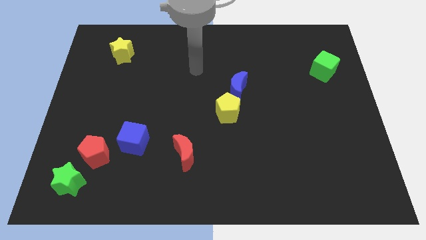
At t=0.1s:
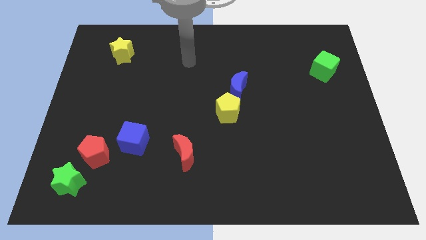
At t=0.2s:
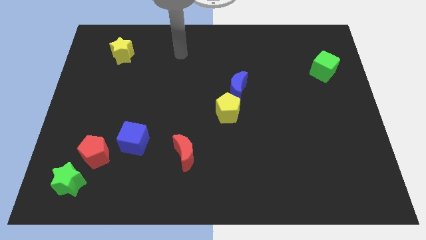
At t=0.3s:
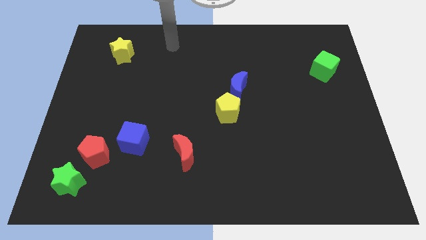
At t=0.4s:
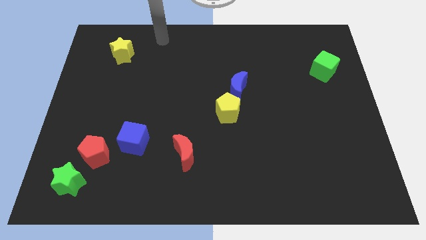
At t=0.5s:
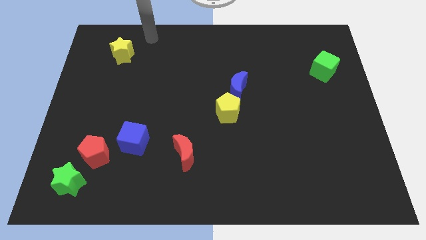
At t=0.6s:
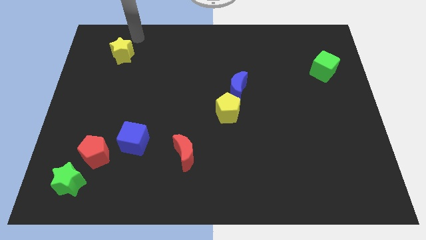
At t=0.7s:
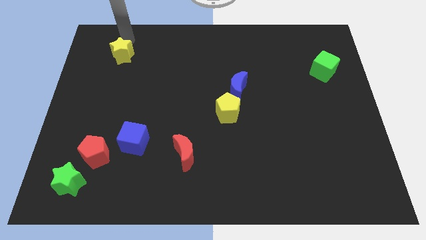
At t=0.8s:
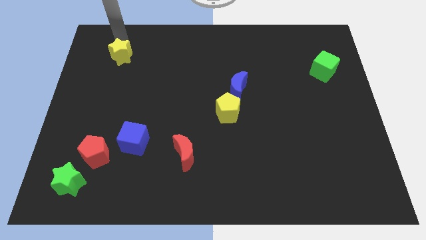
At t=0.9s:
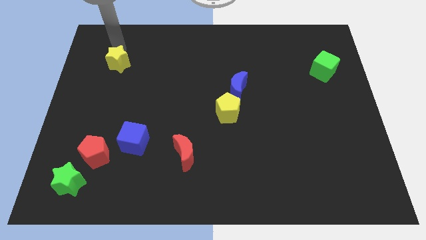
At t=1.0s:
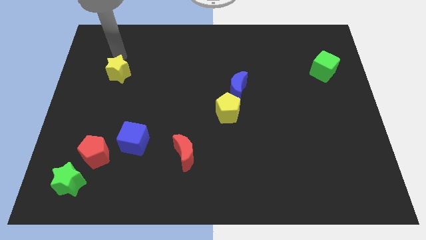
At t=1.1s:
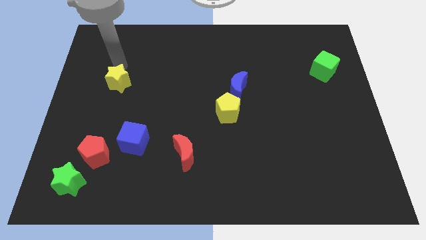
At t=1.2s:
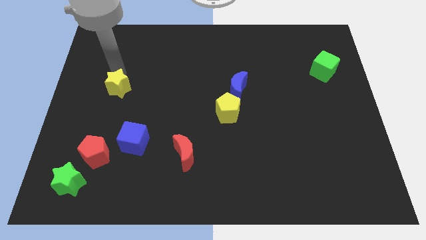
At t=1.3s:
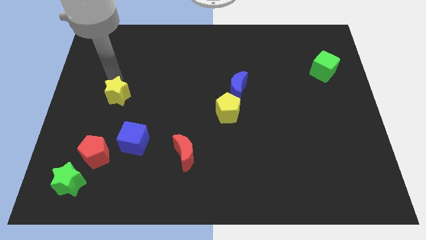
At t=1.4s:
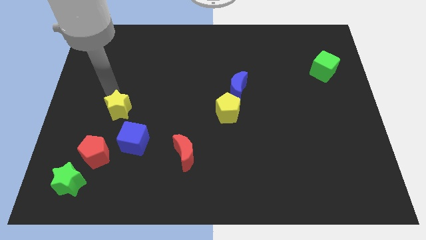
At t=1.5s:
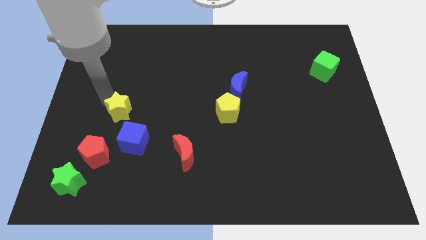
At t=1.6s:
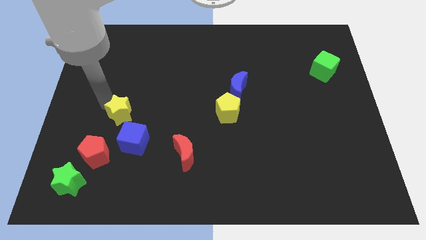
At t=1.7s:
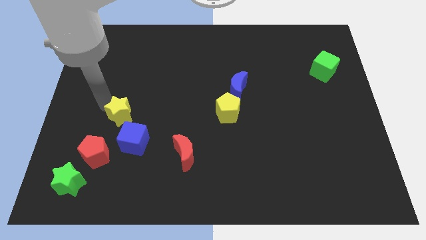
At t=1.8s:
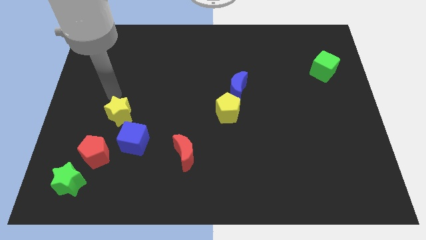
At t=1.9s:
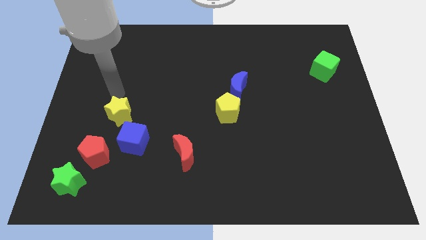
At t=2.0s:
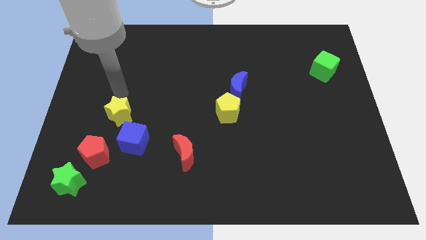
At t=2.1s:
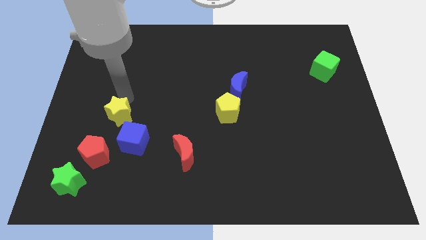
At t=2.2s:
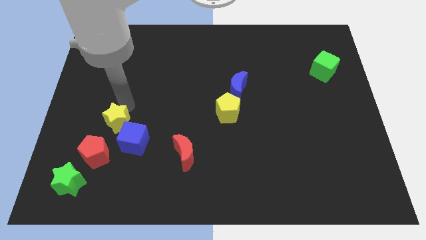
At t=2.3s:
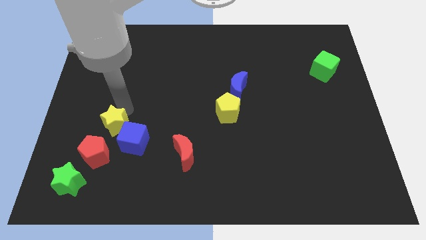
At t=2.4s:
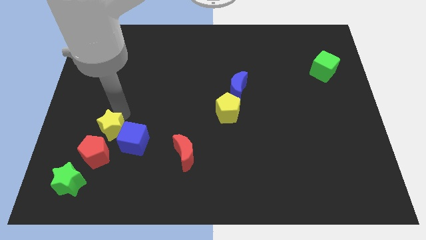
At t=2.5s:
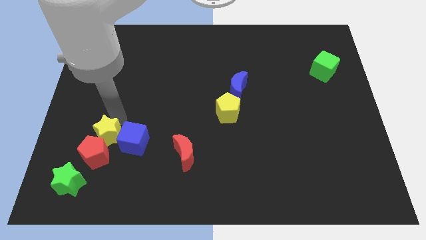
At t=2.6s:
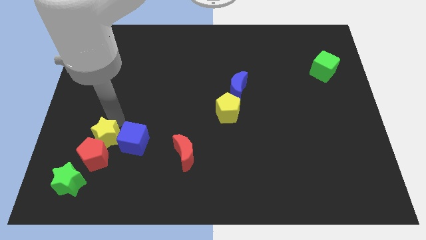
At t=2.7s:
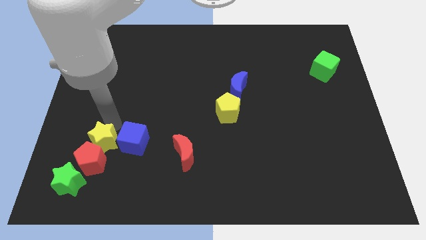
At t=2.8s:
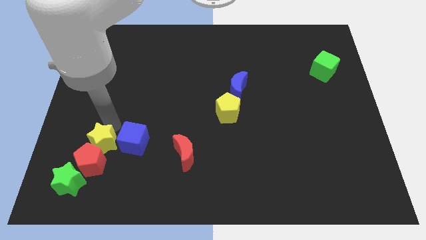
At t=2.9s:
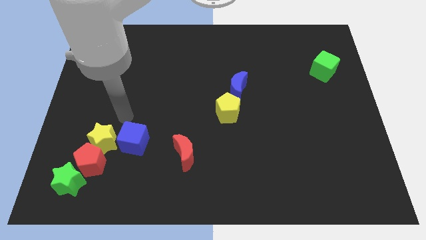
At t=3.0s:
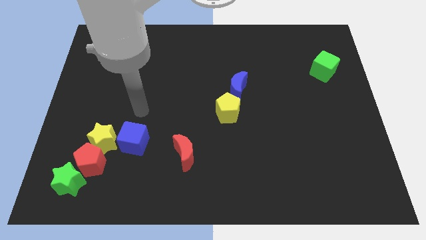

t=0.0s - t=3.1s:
push the yellow star into the red pentagon

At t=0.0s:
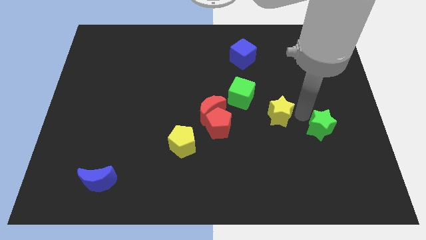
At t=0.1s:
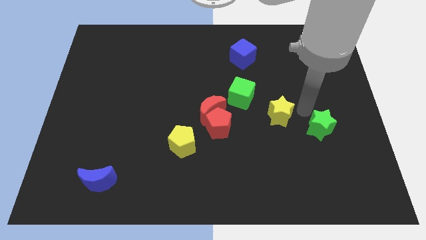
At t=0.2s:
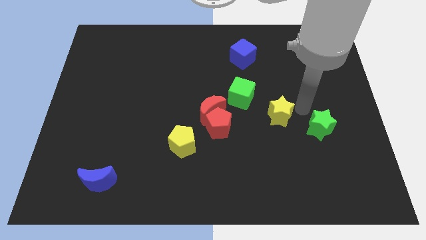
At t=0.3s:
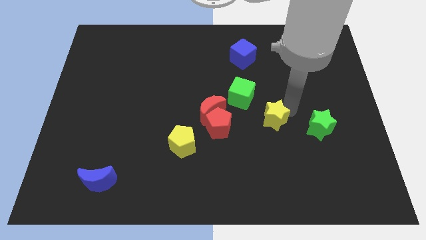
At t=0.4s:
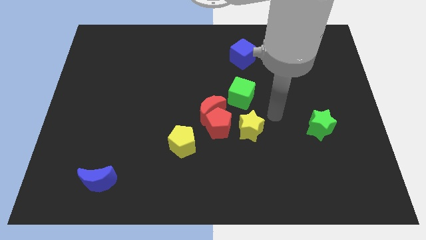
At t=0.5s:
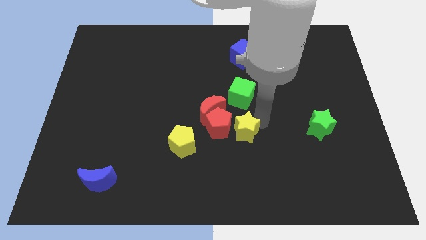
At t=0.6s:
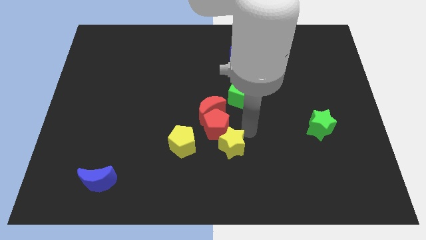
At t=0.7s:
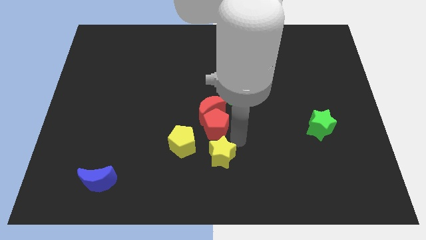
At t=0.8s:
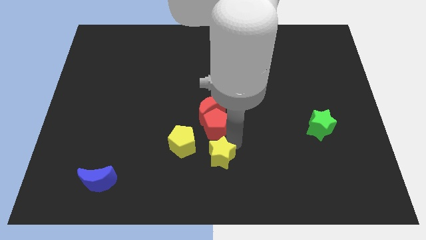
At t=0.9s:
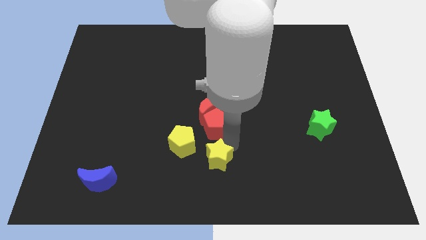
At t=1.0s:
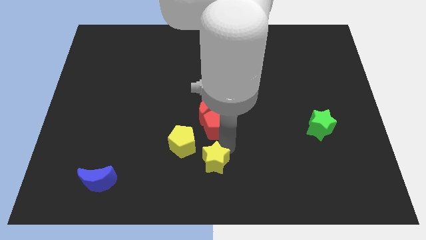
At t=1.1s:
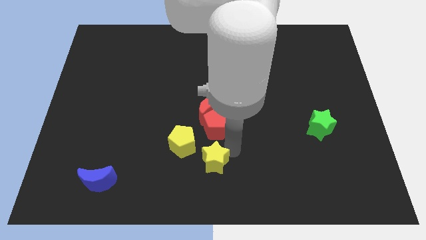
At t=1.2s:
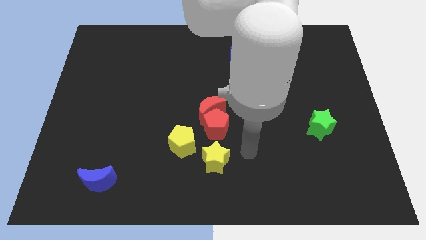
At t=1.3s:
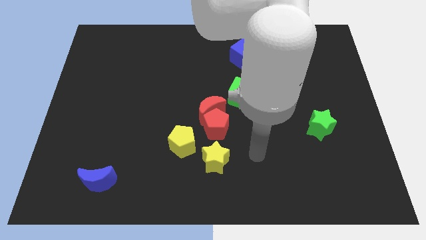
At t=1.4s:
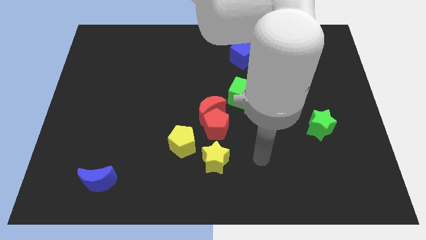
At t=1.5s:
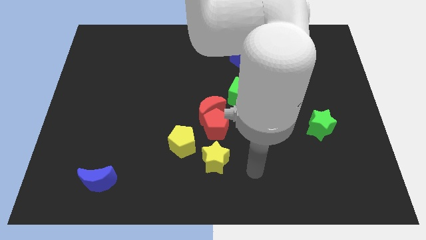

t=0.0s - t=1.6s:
move the yellow star to the bottom side of the red pentagon

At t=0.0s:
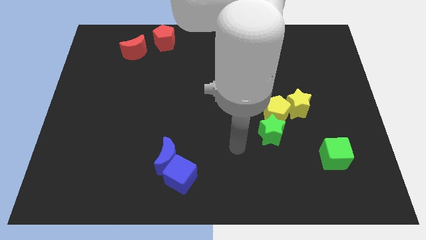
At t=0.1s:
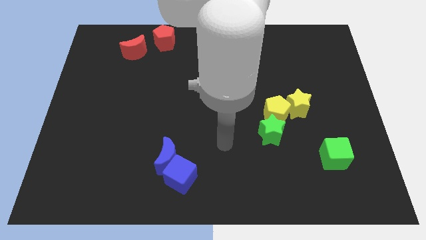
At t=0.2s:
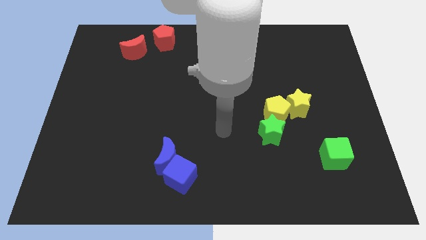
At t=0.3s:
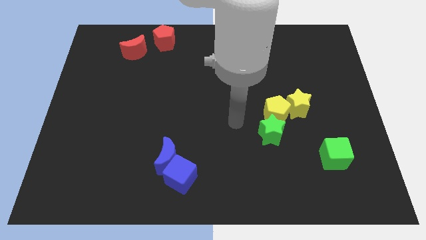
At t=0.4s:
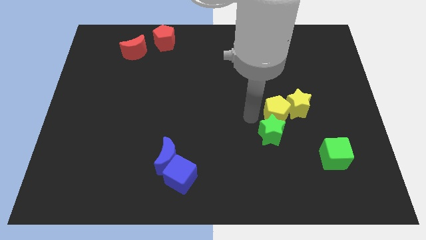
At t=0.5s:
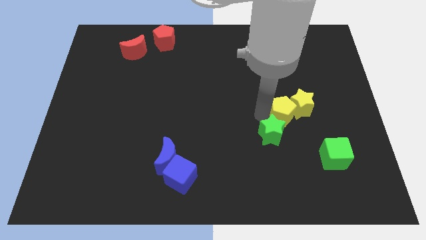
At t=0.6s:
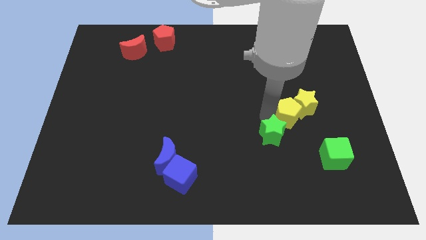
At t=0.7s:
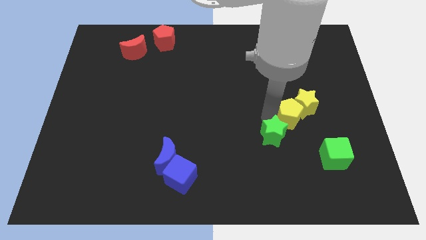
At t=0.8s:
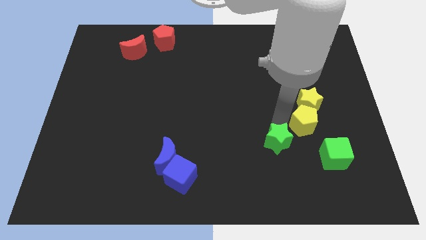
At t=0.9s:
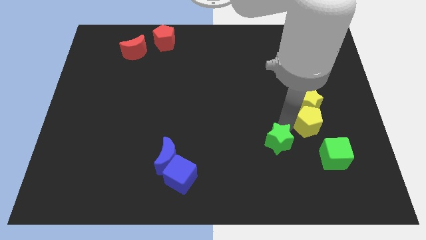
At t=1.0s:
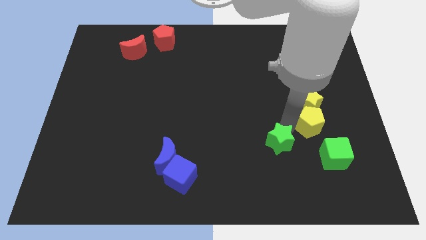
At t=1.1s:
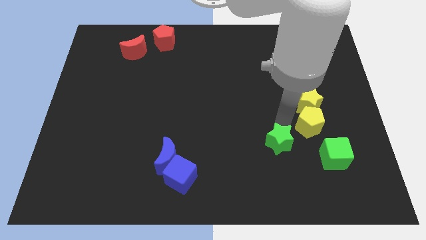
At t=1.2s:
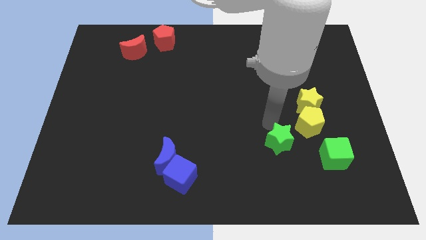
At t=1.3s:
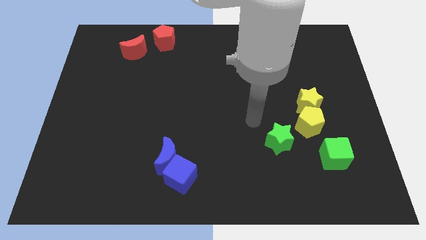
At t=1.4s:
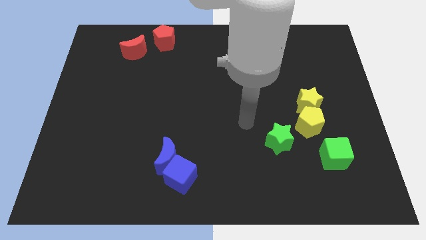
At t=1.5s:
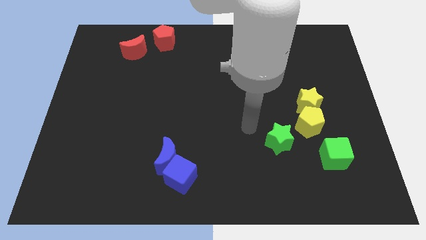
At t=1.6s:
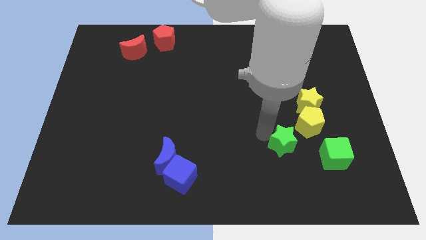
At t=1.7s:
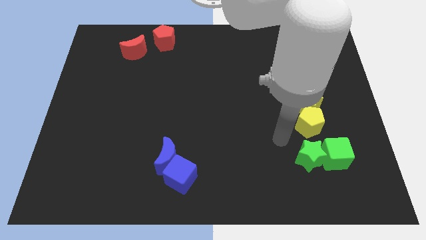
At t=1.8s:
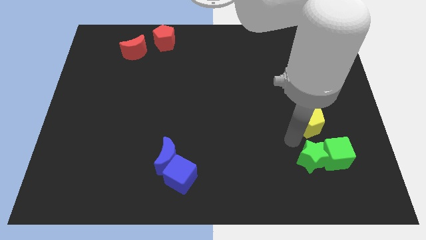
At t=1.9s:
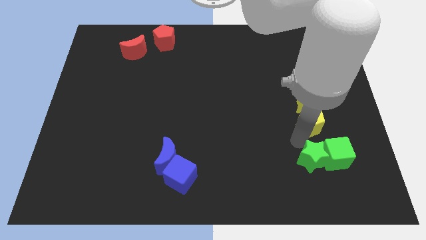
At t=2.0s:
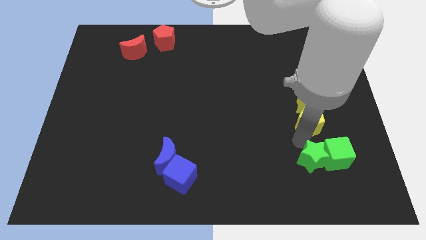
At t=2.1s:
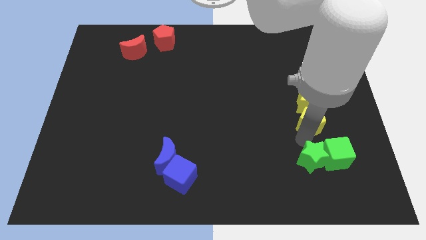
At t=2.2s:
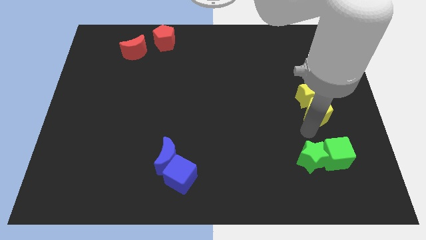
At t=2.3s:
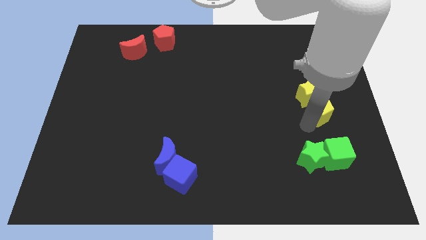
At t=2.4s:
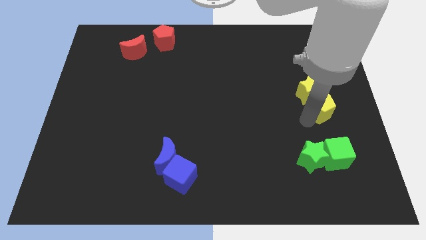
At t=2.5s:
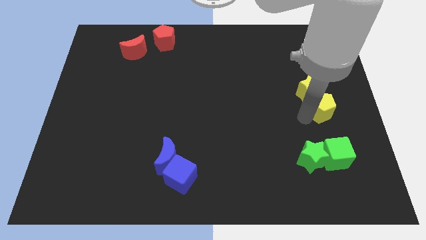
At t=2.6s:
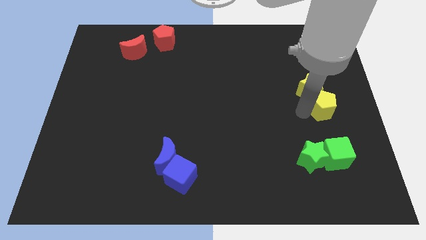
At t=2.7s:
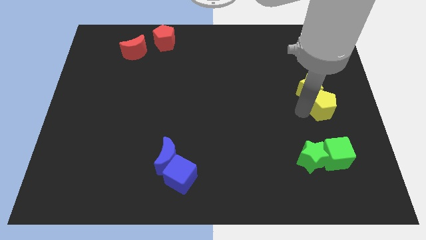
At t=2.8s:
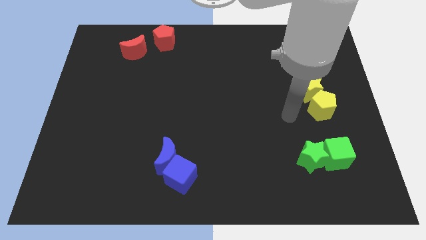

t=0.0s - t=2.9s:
group up the green and yellow blocks separately

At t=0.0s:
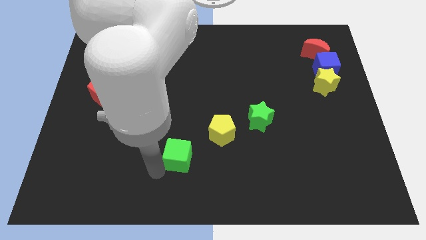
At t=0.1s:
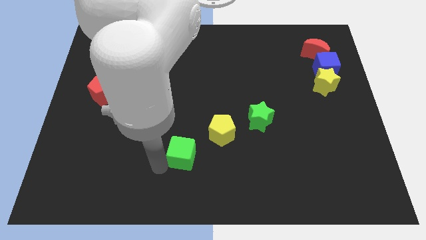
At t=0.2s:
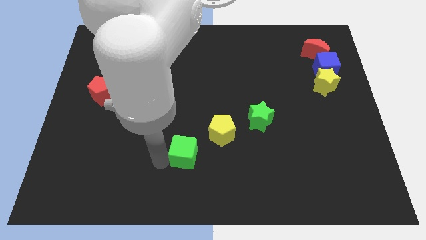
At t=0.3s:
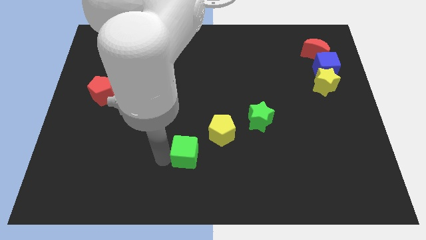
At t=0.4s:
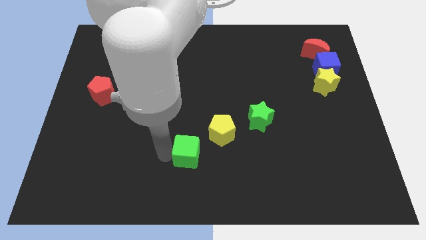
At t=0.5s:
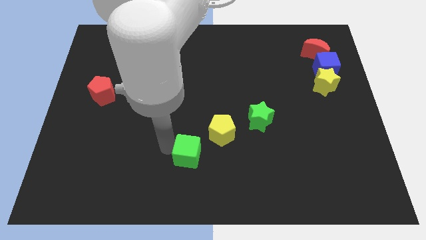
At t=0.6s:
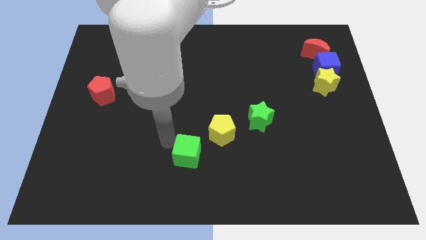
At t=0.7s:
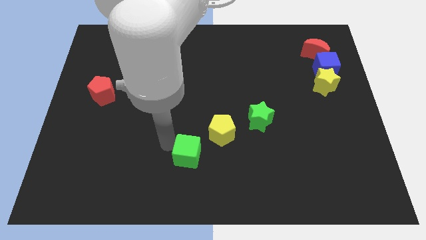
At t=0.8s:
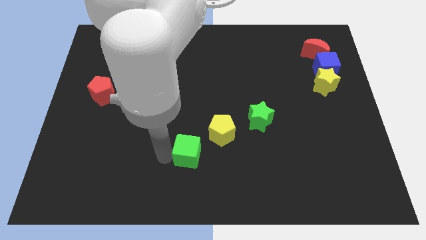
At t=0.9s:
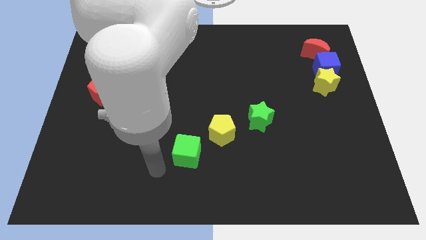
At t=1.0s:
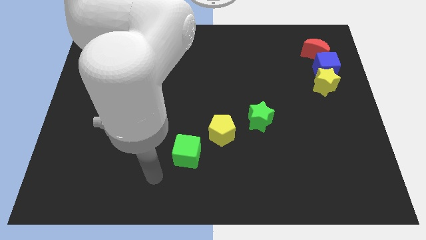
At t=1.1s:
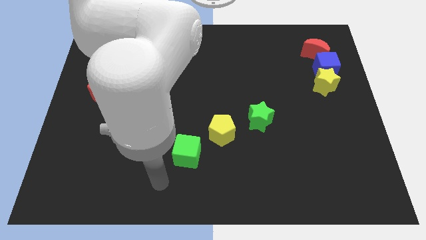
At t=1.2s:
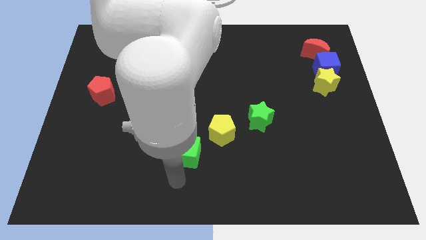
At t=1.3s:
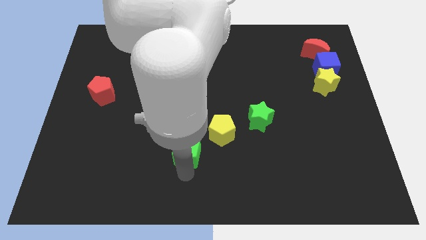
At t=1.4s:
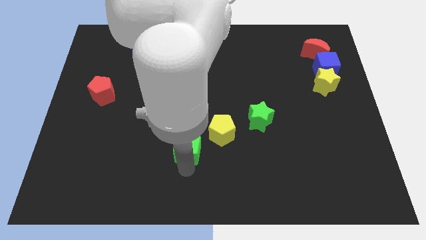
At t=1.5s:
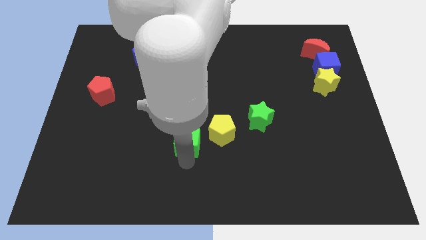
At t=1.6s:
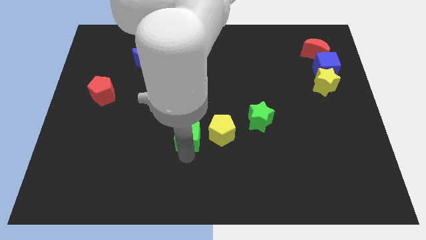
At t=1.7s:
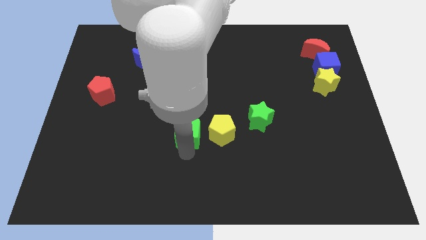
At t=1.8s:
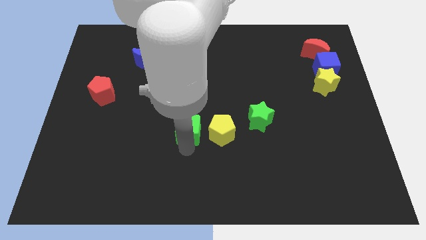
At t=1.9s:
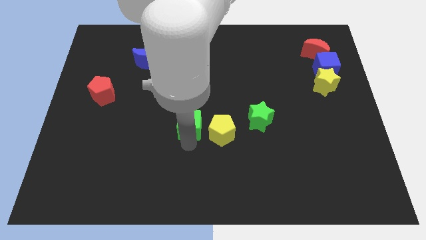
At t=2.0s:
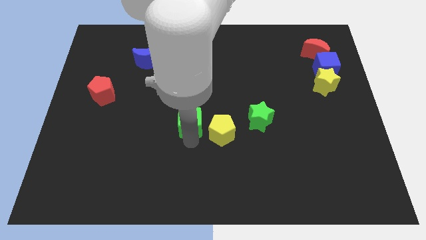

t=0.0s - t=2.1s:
place green cube to the left of yellow pentagon
